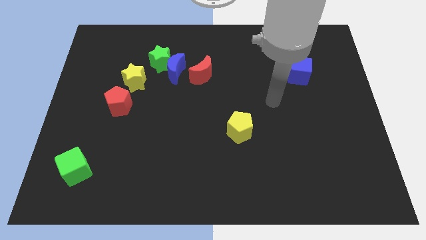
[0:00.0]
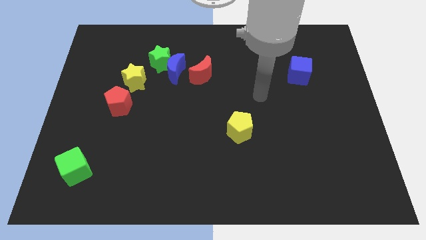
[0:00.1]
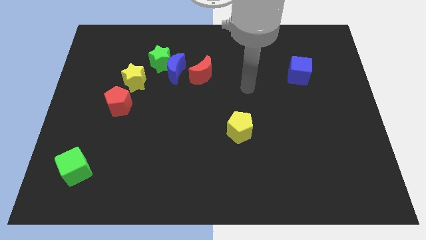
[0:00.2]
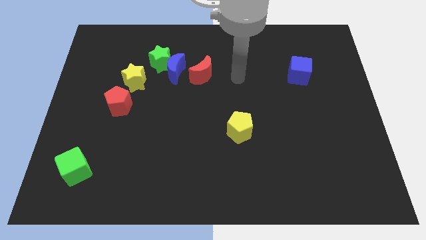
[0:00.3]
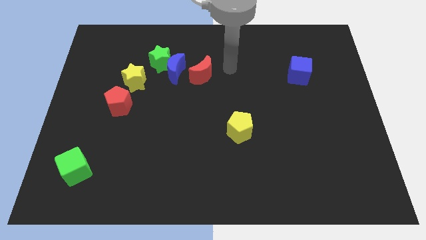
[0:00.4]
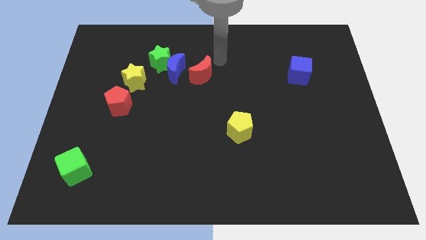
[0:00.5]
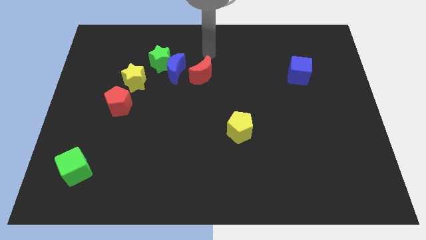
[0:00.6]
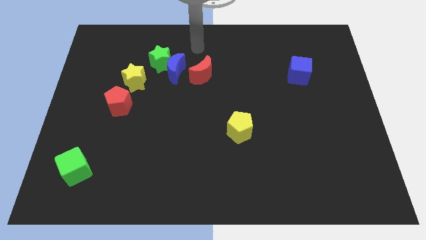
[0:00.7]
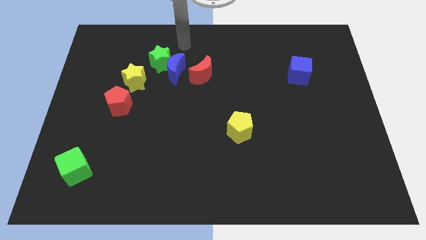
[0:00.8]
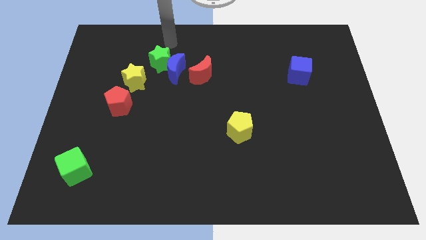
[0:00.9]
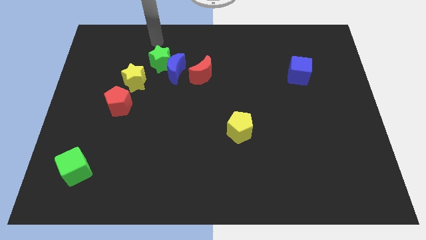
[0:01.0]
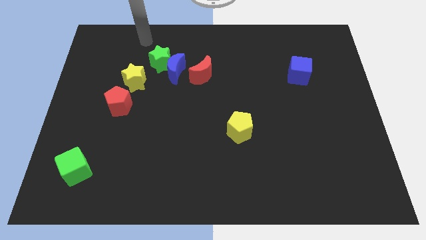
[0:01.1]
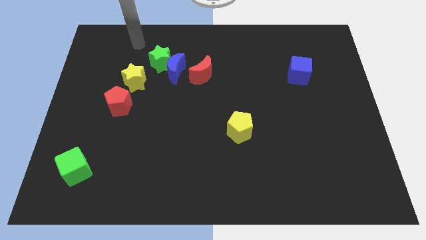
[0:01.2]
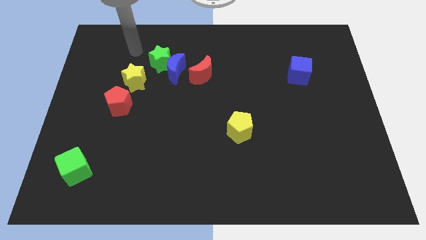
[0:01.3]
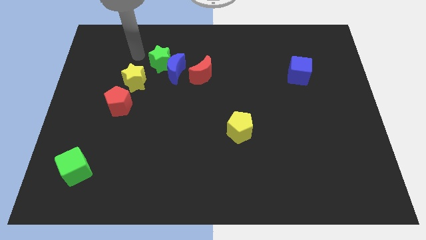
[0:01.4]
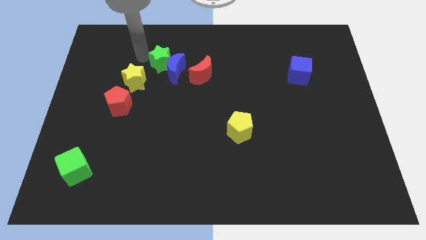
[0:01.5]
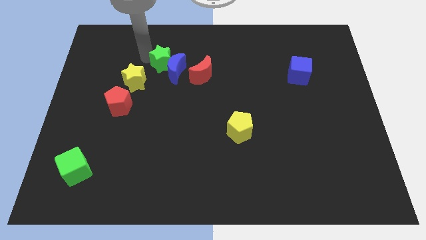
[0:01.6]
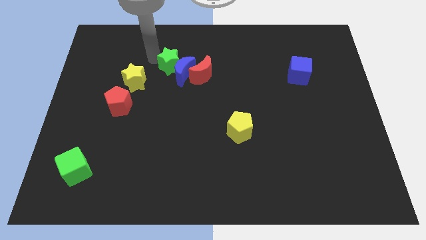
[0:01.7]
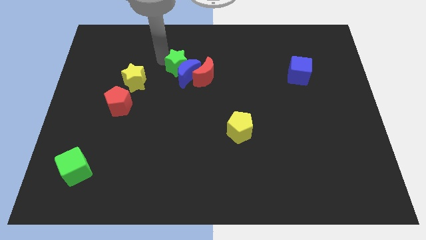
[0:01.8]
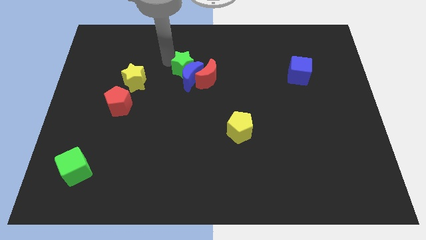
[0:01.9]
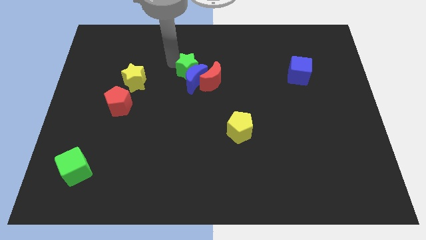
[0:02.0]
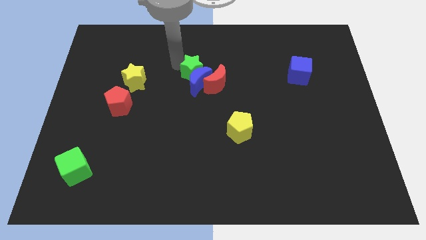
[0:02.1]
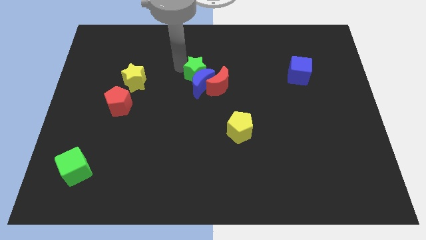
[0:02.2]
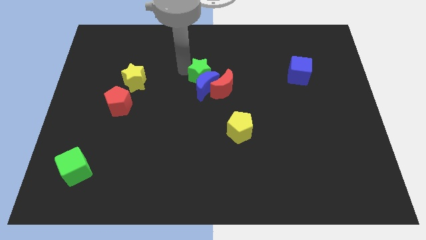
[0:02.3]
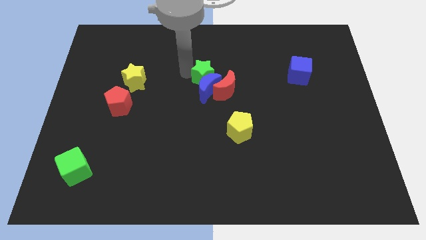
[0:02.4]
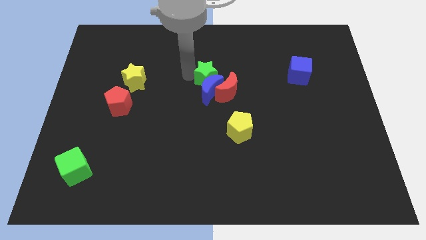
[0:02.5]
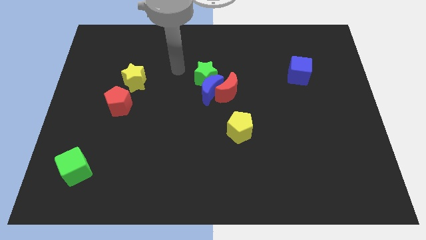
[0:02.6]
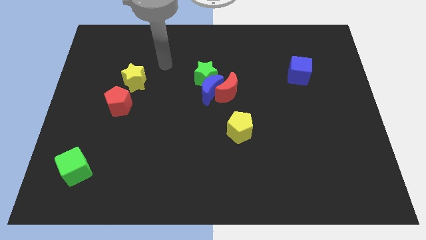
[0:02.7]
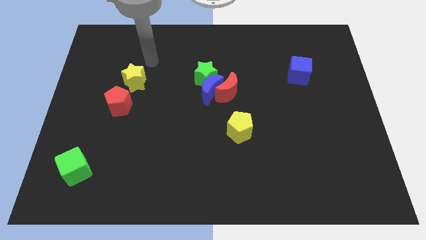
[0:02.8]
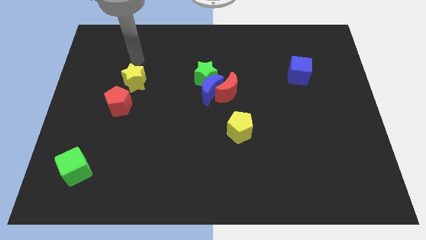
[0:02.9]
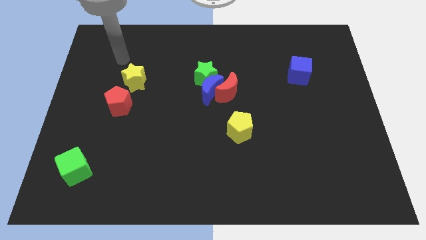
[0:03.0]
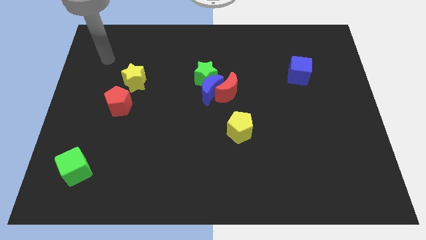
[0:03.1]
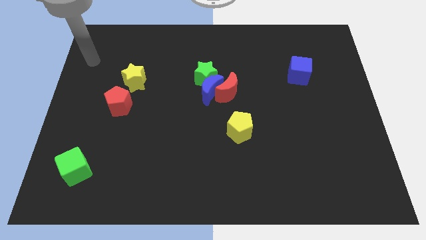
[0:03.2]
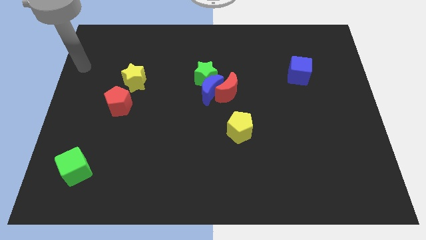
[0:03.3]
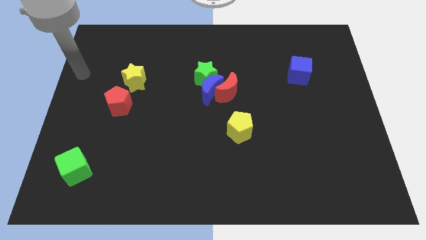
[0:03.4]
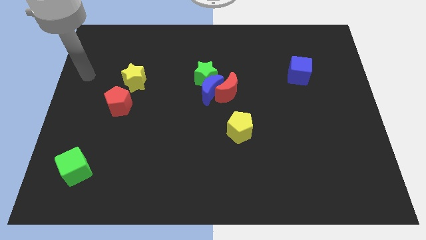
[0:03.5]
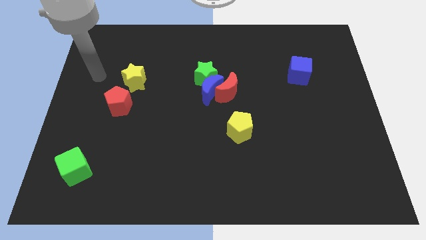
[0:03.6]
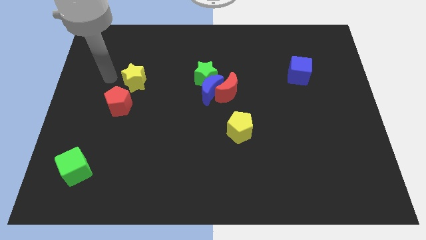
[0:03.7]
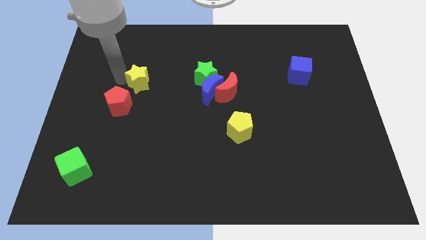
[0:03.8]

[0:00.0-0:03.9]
place the arm left to the yellow star

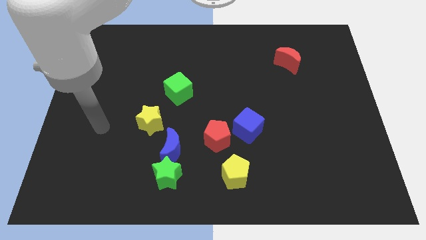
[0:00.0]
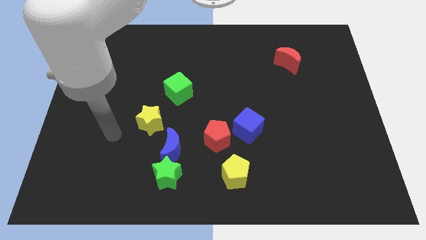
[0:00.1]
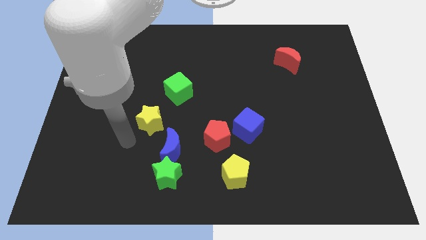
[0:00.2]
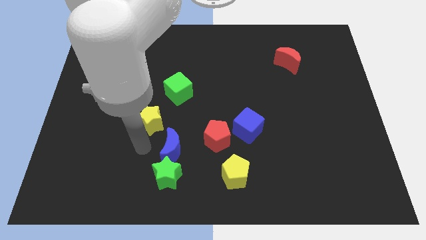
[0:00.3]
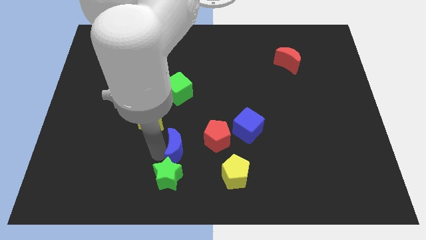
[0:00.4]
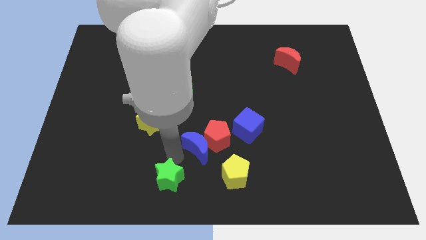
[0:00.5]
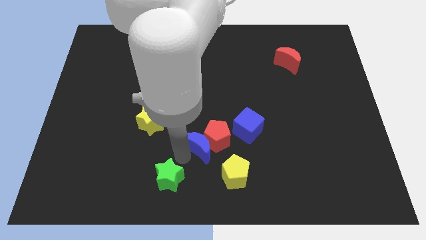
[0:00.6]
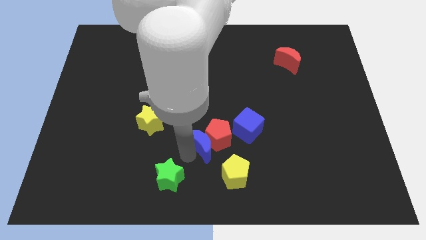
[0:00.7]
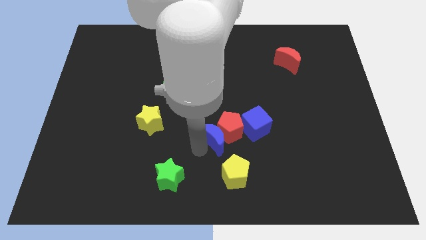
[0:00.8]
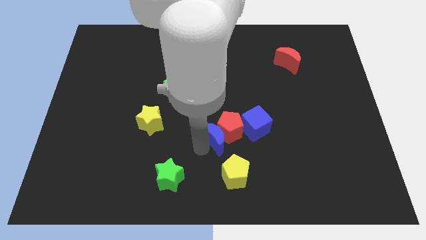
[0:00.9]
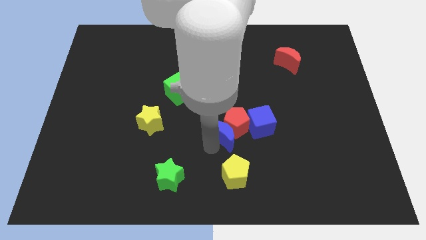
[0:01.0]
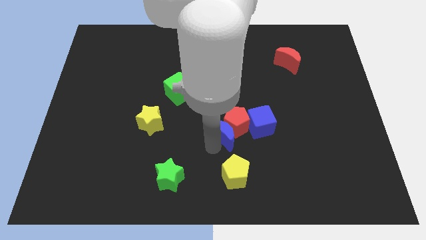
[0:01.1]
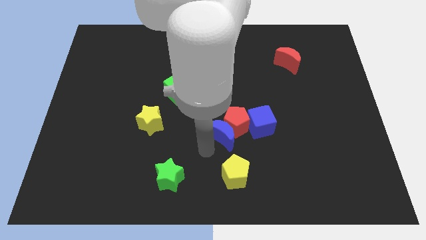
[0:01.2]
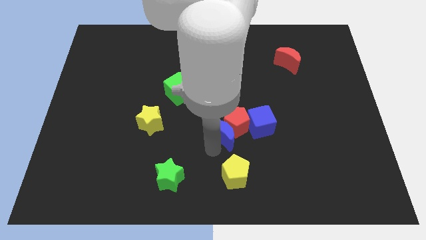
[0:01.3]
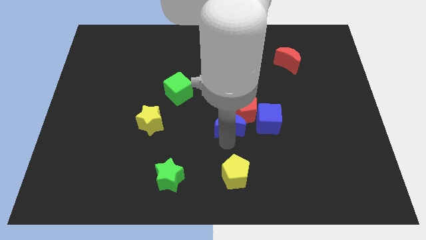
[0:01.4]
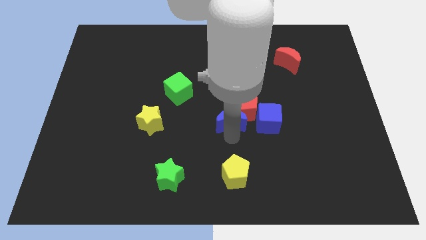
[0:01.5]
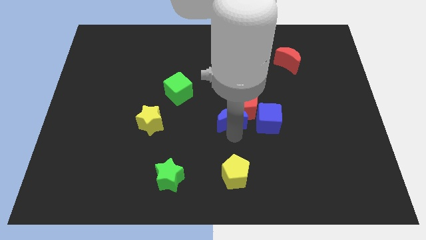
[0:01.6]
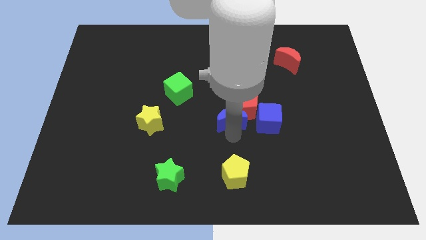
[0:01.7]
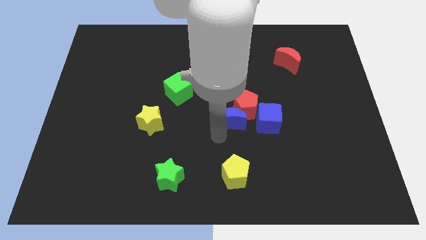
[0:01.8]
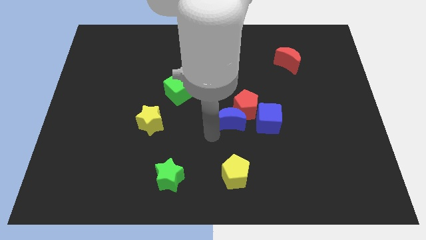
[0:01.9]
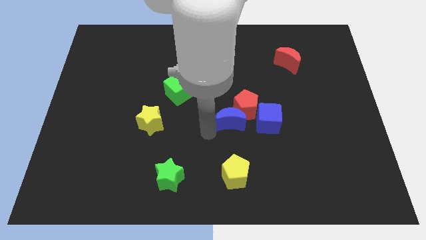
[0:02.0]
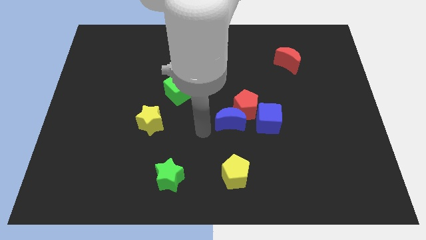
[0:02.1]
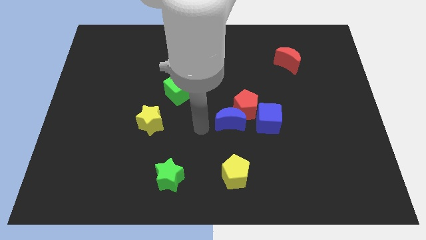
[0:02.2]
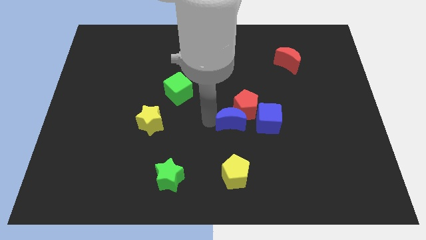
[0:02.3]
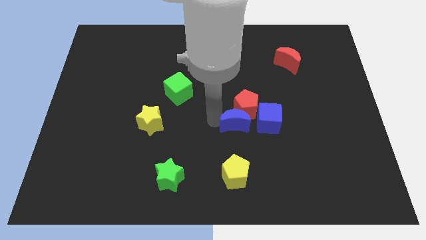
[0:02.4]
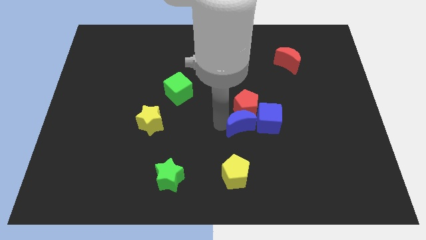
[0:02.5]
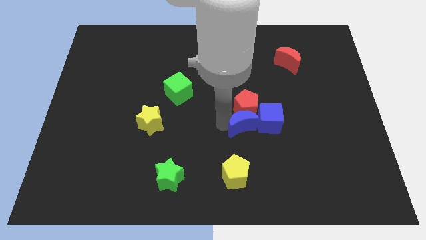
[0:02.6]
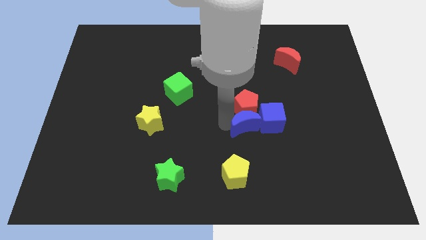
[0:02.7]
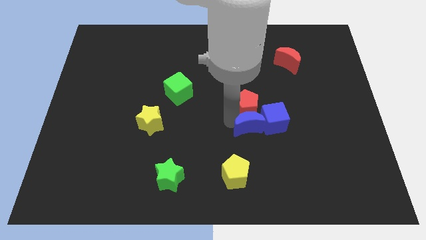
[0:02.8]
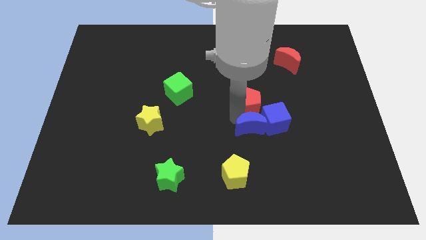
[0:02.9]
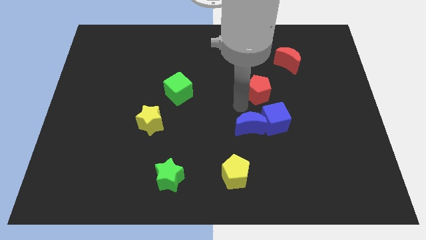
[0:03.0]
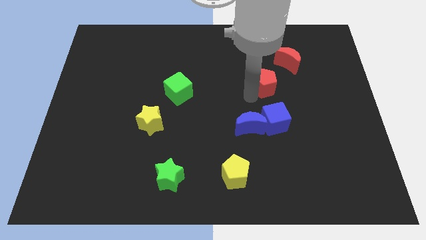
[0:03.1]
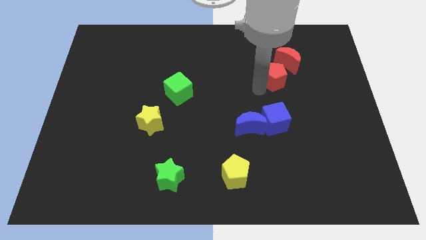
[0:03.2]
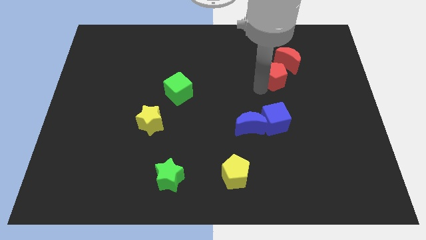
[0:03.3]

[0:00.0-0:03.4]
separate the red pentagon from the blue blocks

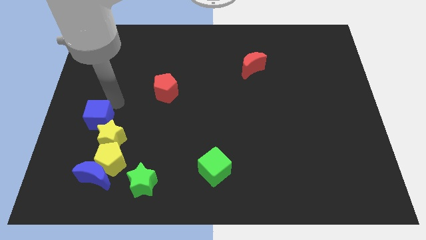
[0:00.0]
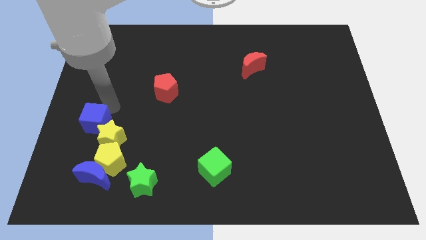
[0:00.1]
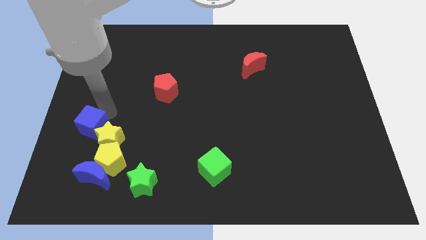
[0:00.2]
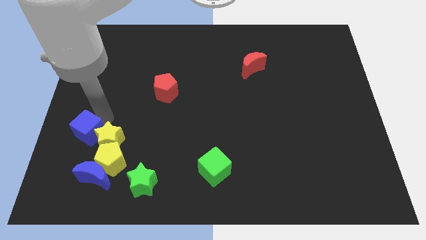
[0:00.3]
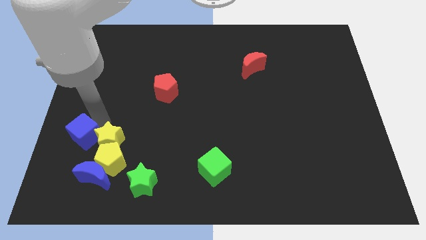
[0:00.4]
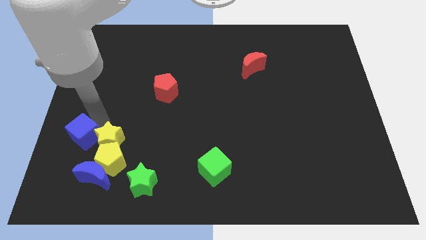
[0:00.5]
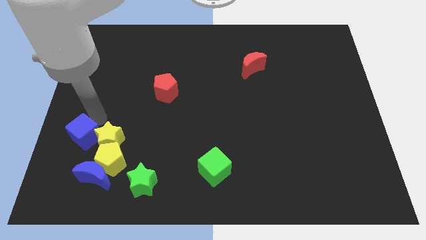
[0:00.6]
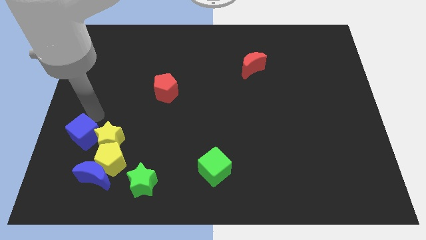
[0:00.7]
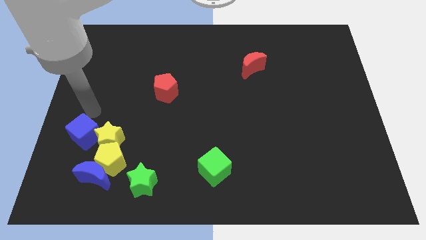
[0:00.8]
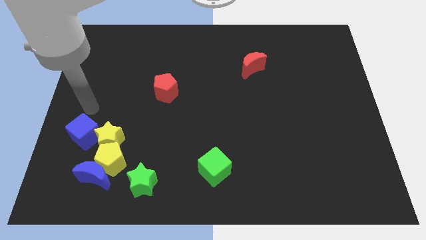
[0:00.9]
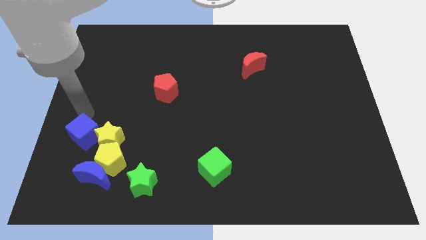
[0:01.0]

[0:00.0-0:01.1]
push the blue cube slightly down

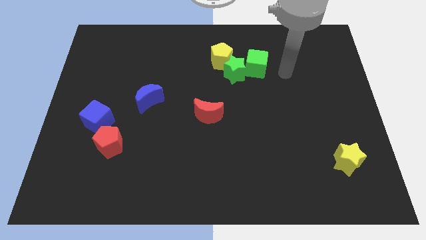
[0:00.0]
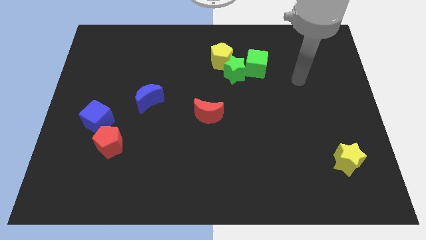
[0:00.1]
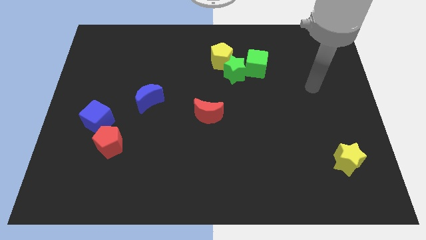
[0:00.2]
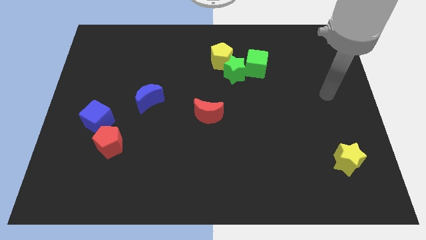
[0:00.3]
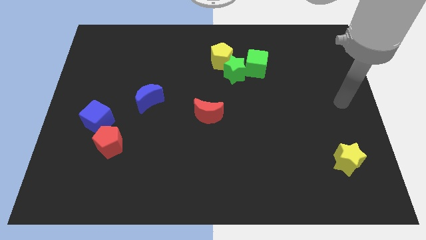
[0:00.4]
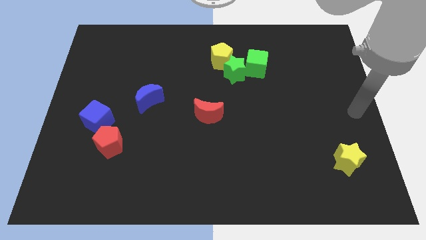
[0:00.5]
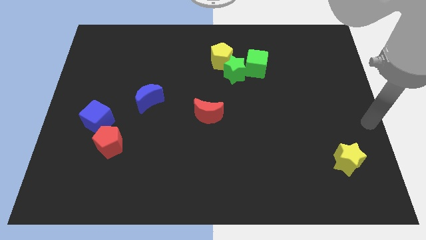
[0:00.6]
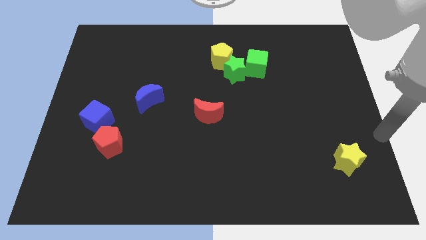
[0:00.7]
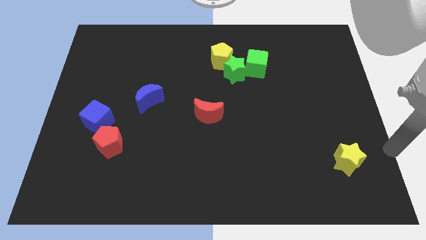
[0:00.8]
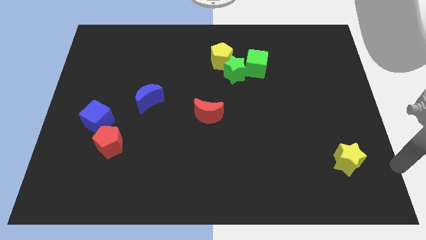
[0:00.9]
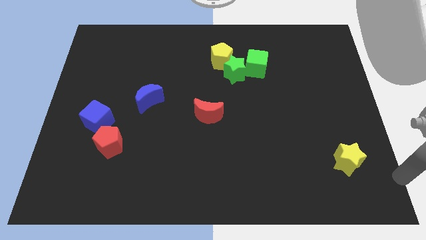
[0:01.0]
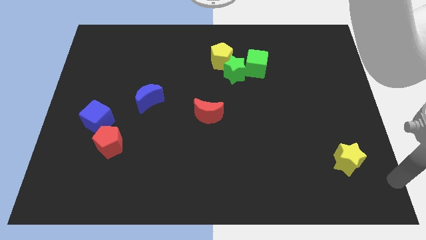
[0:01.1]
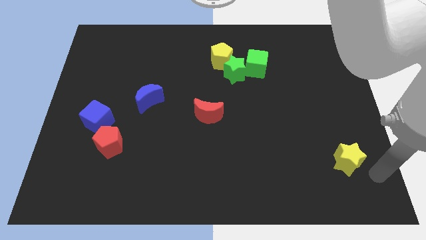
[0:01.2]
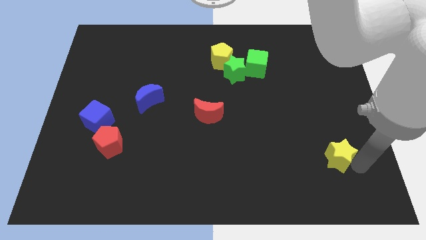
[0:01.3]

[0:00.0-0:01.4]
move the arm to the bottom of the yellow star
